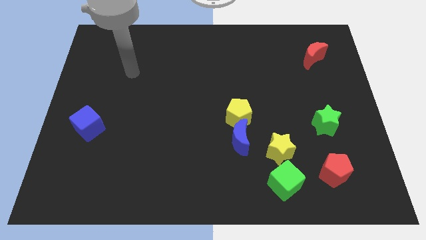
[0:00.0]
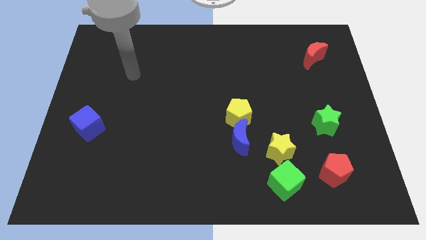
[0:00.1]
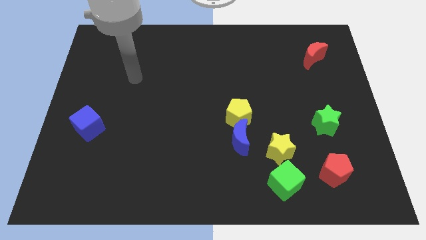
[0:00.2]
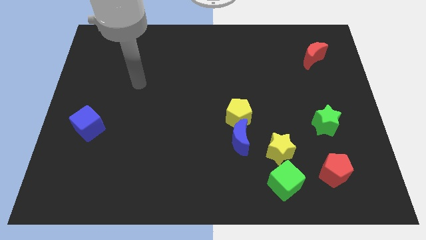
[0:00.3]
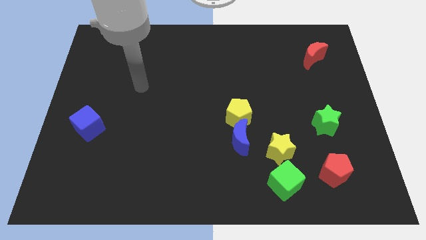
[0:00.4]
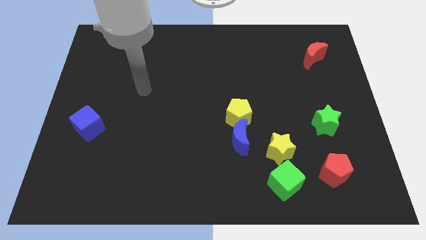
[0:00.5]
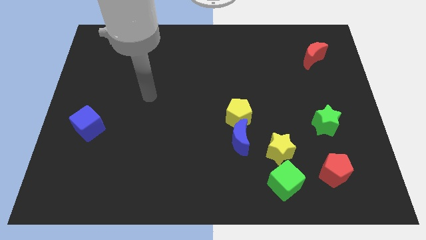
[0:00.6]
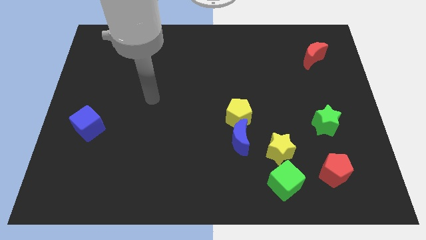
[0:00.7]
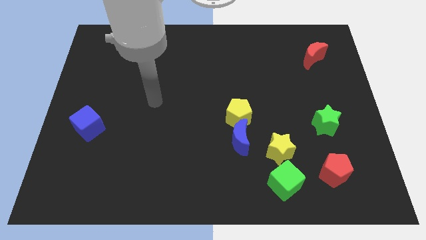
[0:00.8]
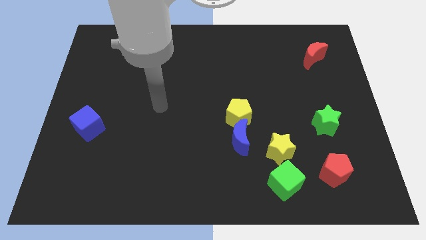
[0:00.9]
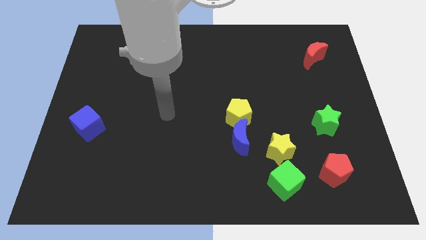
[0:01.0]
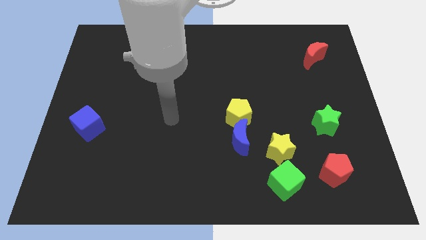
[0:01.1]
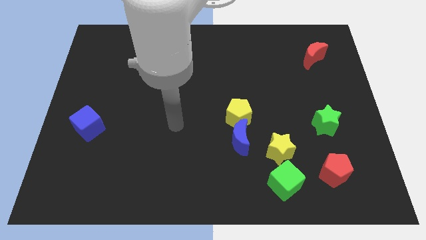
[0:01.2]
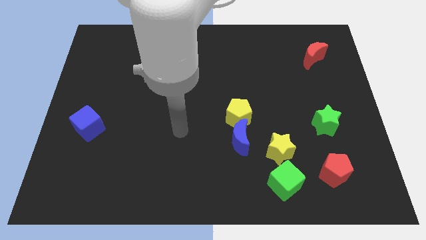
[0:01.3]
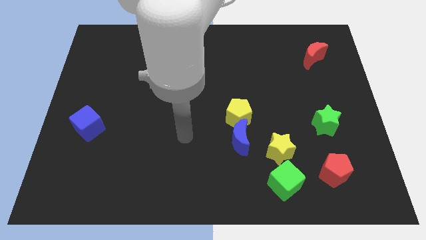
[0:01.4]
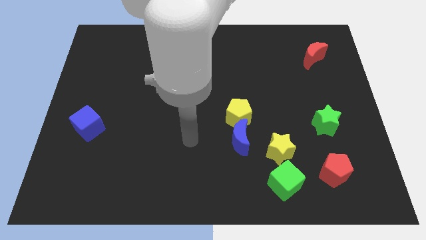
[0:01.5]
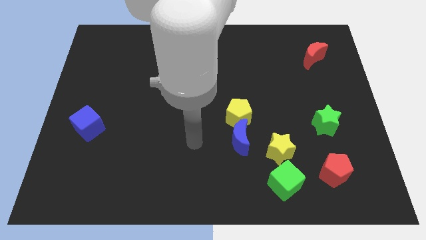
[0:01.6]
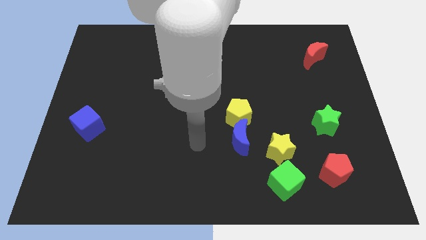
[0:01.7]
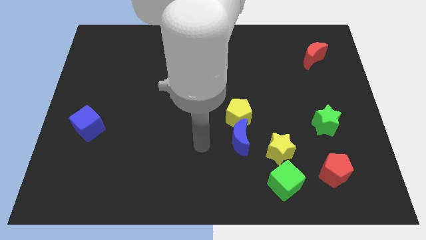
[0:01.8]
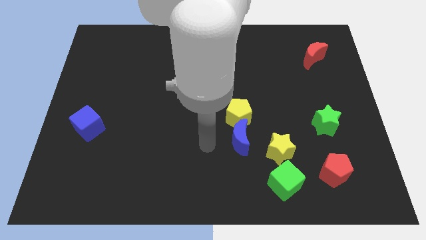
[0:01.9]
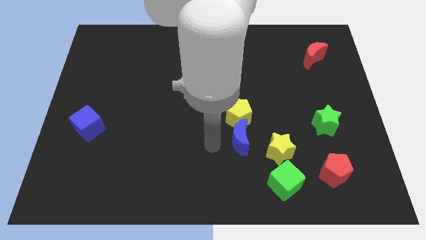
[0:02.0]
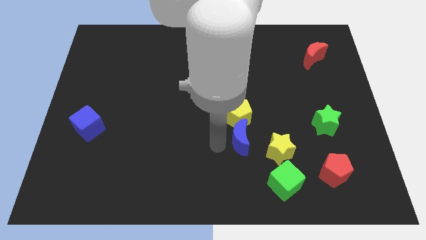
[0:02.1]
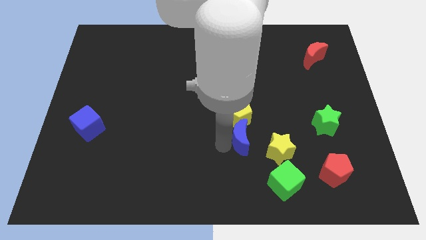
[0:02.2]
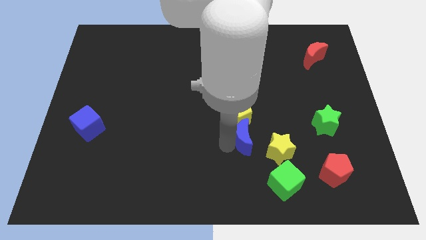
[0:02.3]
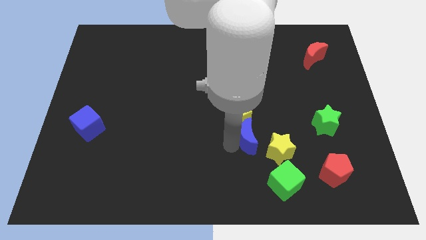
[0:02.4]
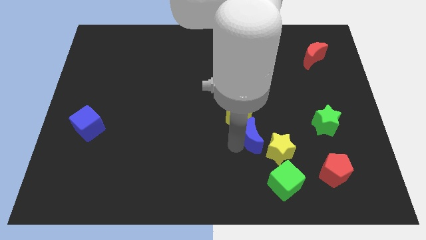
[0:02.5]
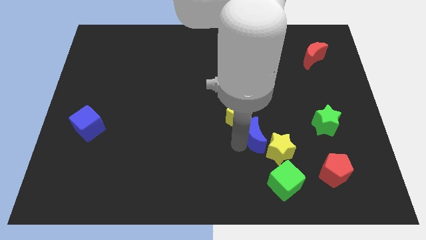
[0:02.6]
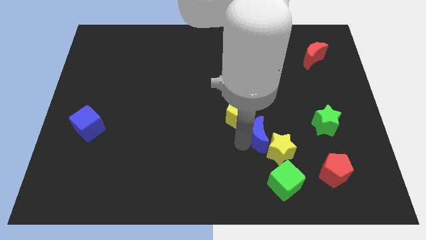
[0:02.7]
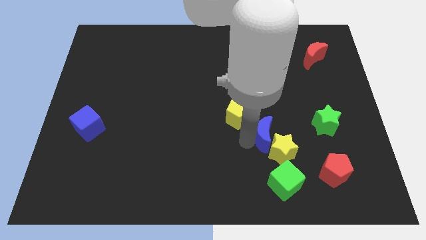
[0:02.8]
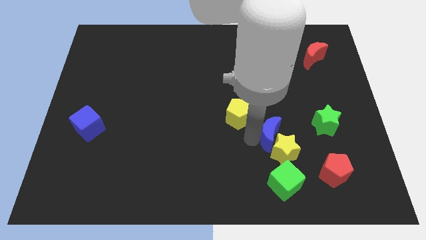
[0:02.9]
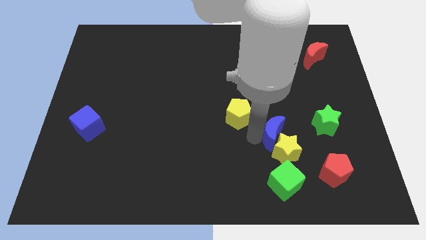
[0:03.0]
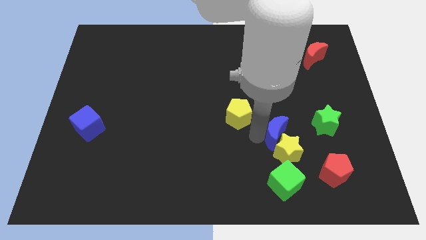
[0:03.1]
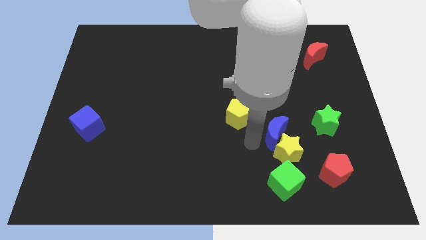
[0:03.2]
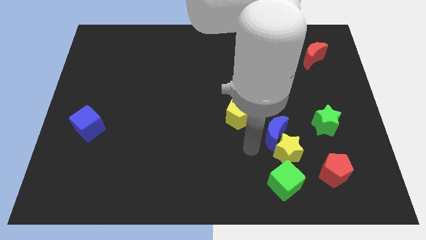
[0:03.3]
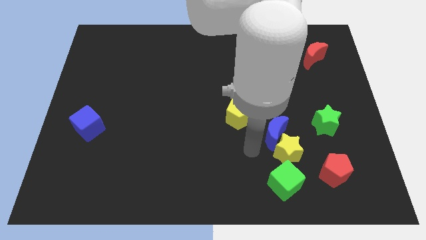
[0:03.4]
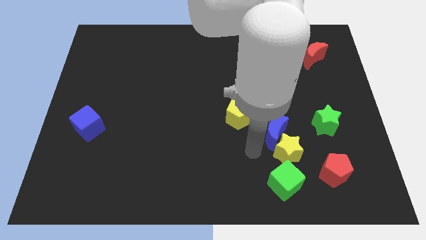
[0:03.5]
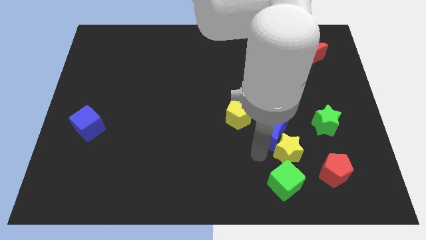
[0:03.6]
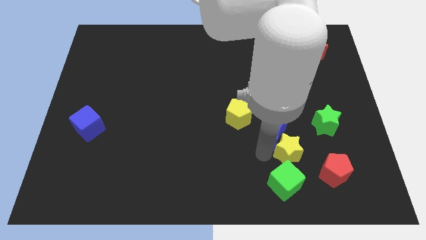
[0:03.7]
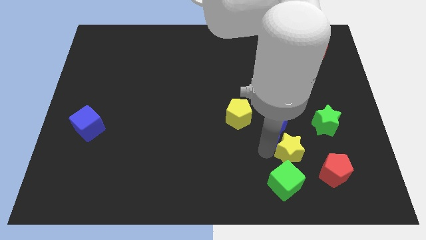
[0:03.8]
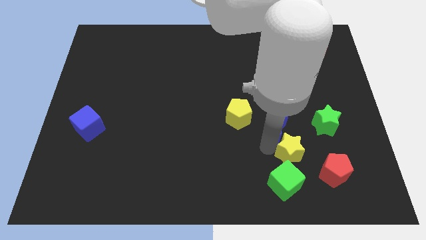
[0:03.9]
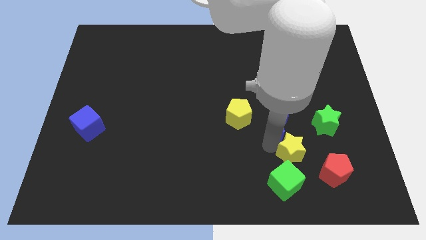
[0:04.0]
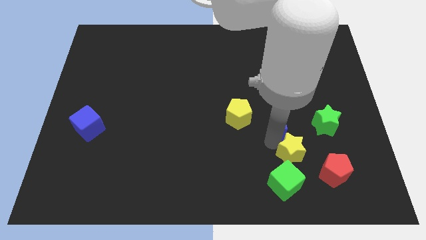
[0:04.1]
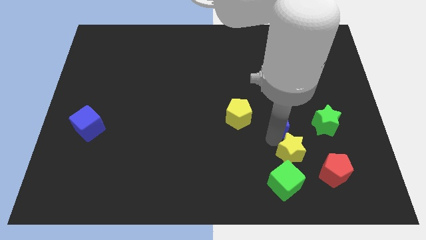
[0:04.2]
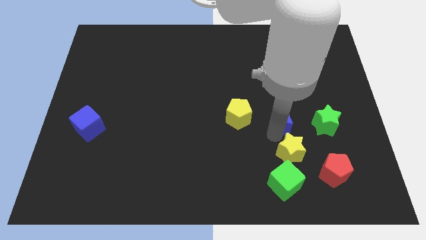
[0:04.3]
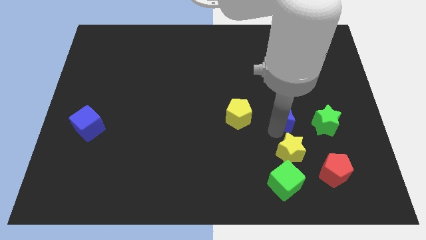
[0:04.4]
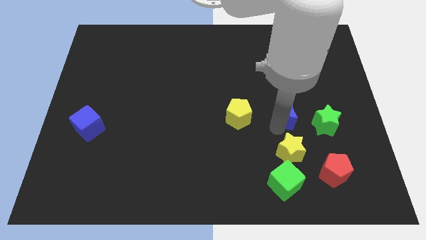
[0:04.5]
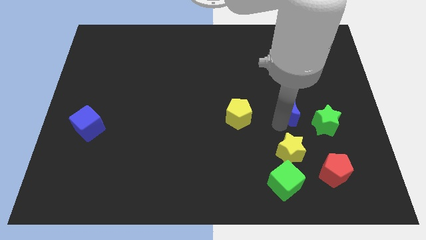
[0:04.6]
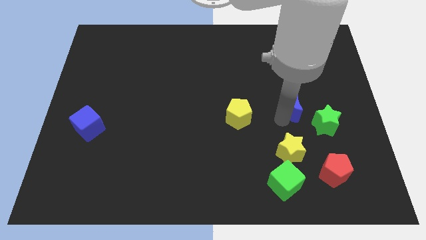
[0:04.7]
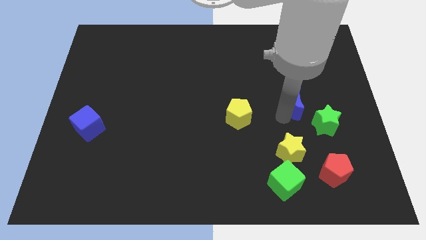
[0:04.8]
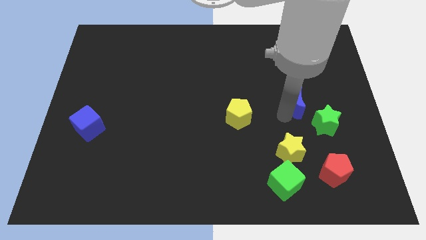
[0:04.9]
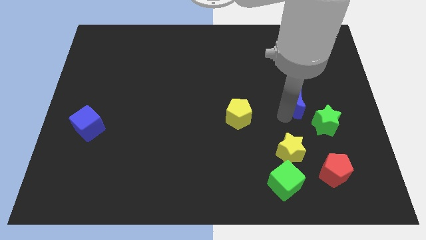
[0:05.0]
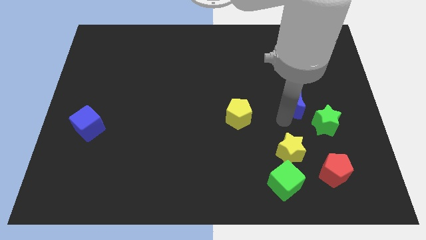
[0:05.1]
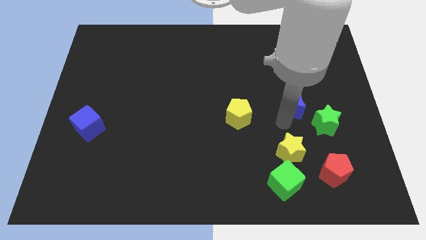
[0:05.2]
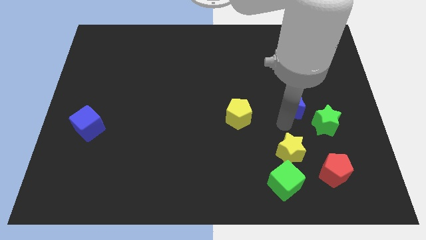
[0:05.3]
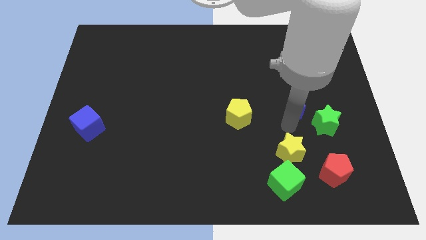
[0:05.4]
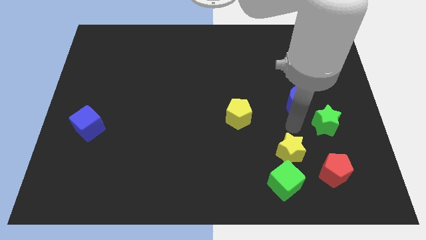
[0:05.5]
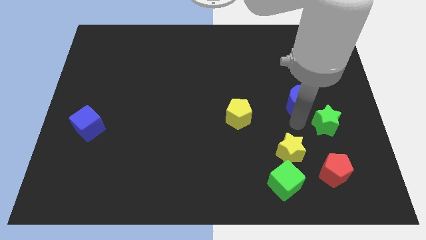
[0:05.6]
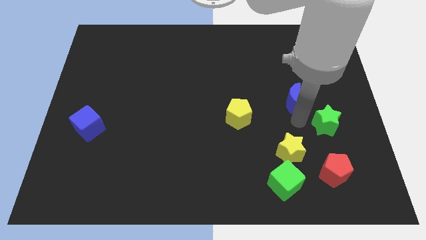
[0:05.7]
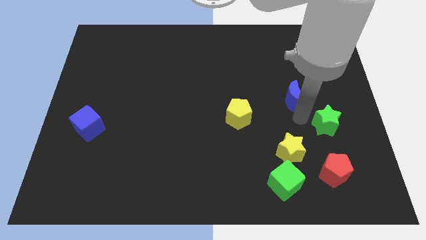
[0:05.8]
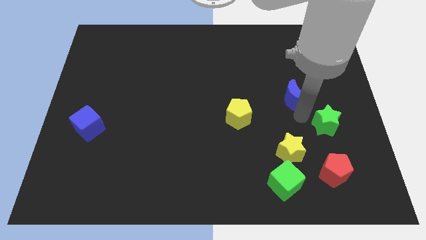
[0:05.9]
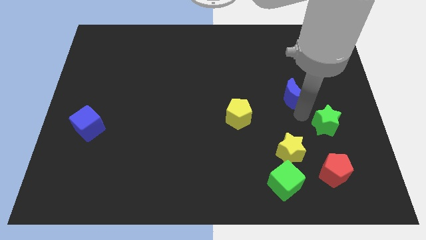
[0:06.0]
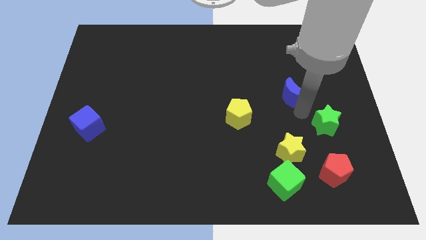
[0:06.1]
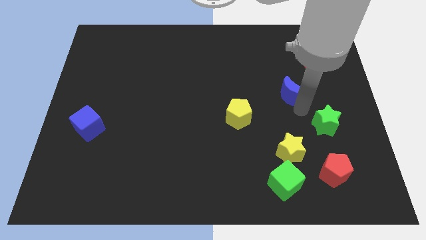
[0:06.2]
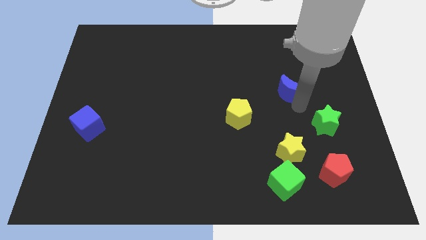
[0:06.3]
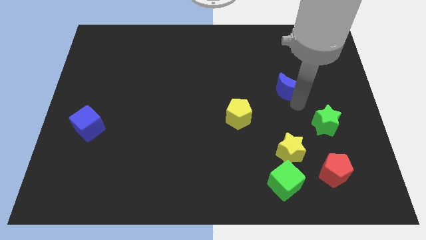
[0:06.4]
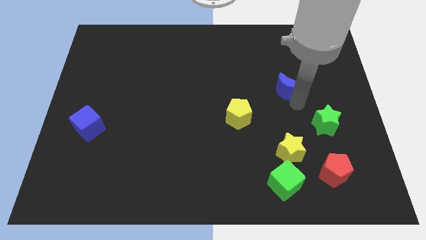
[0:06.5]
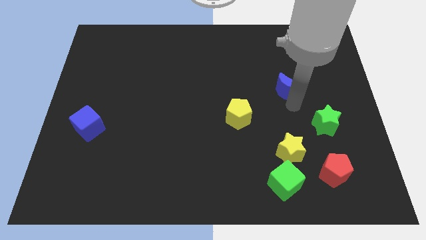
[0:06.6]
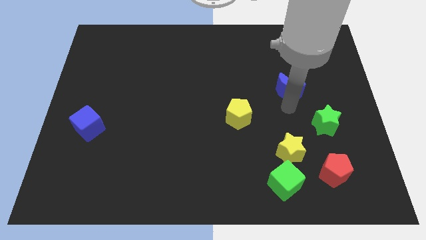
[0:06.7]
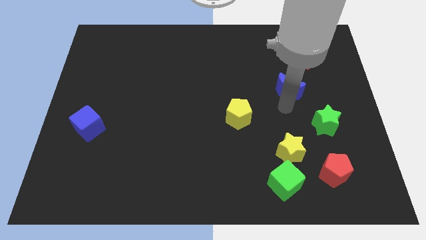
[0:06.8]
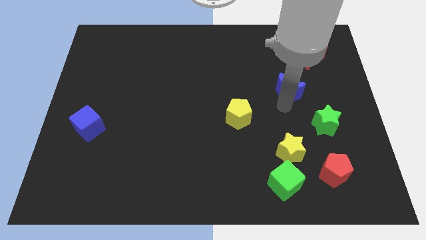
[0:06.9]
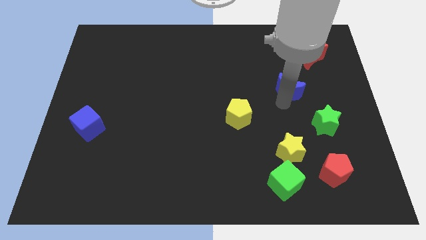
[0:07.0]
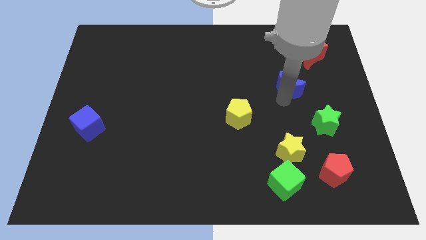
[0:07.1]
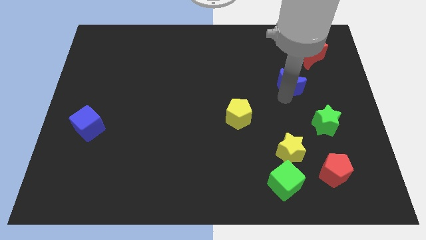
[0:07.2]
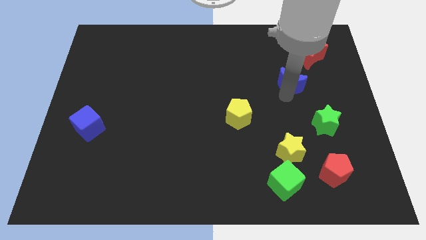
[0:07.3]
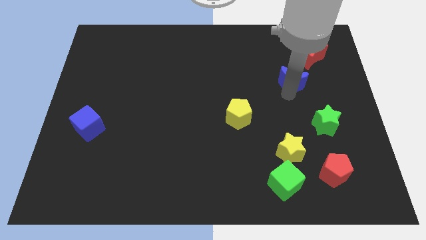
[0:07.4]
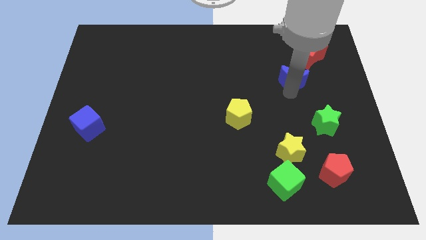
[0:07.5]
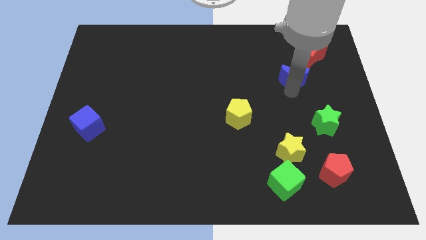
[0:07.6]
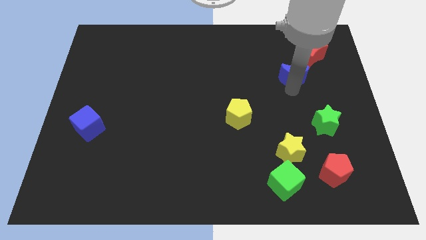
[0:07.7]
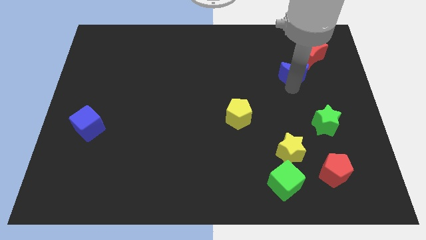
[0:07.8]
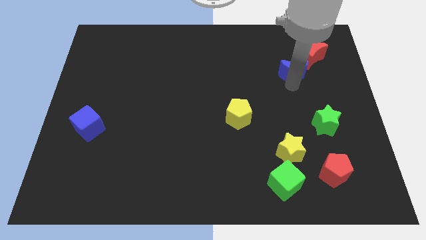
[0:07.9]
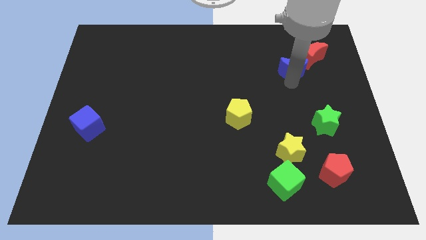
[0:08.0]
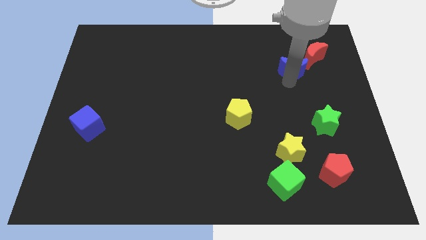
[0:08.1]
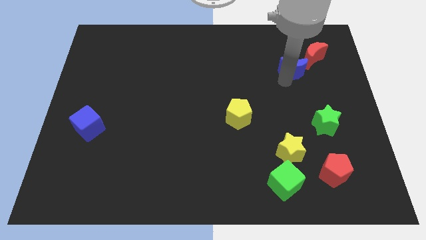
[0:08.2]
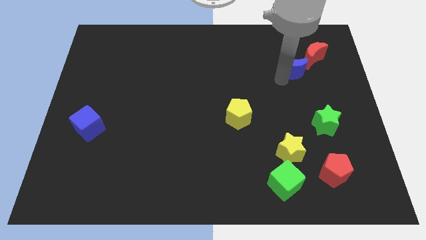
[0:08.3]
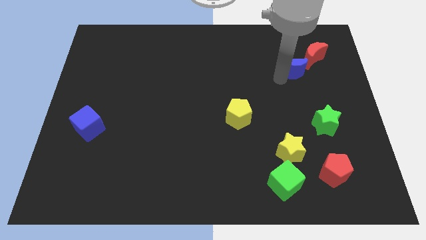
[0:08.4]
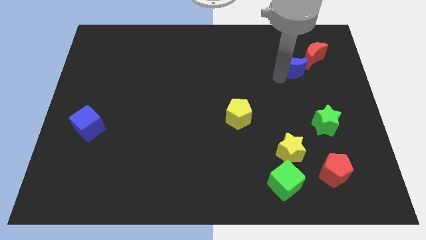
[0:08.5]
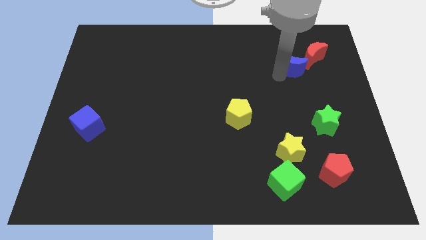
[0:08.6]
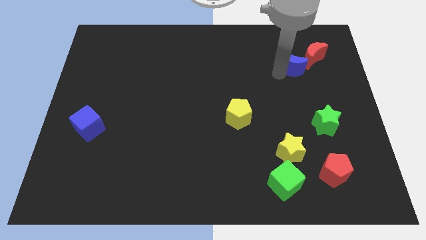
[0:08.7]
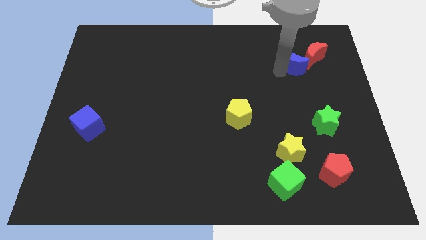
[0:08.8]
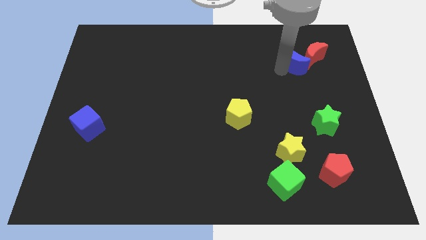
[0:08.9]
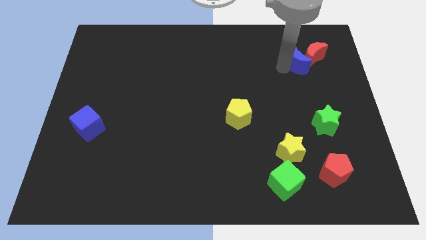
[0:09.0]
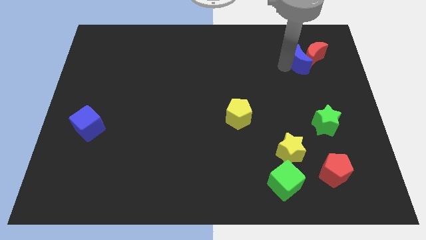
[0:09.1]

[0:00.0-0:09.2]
push the blue moon close to the red moon
